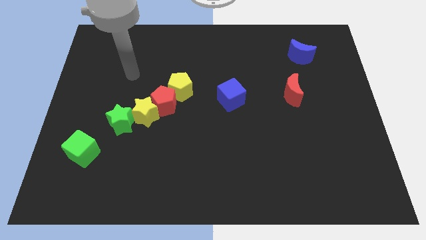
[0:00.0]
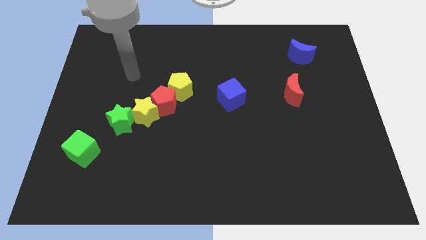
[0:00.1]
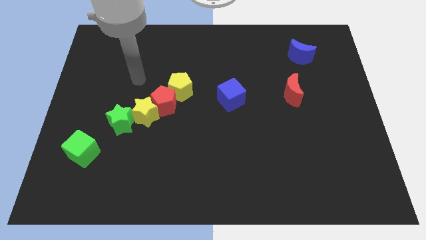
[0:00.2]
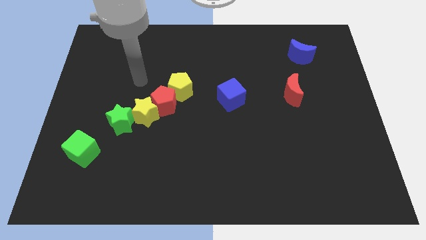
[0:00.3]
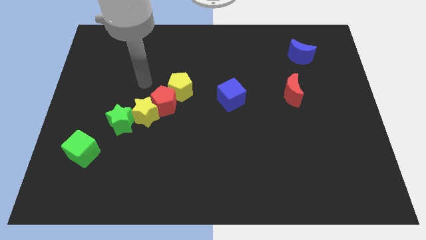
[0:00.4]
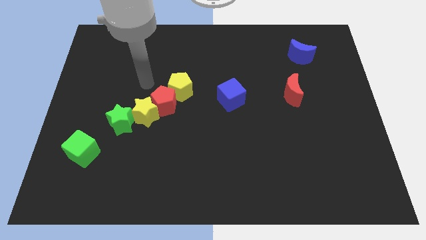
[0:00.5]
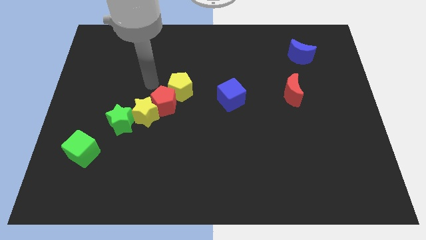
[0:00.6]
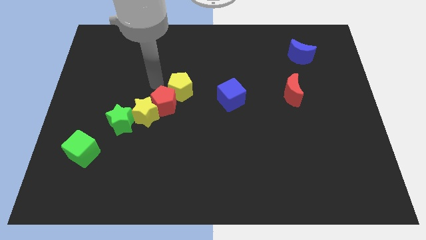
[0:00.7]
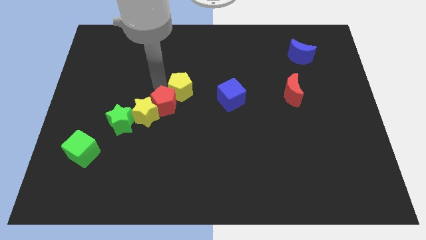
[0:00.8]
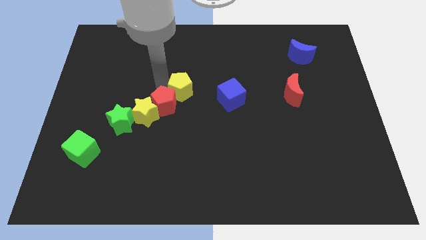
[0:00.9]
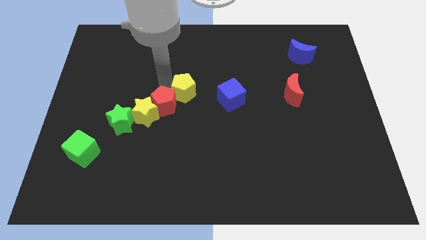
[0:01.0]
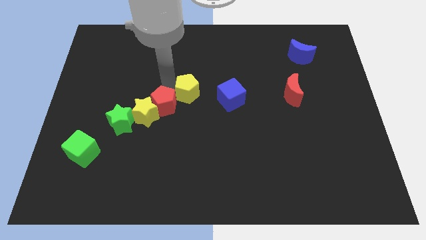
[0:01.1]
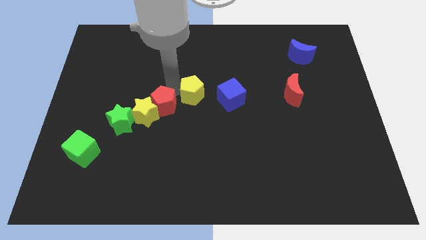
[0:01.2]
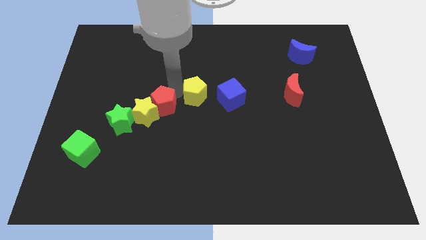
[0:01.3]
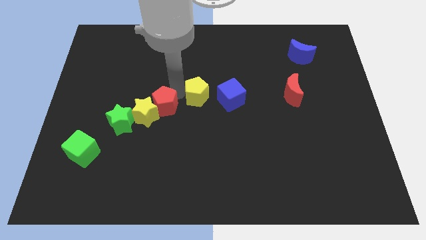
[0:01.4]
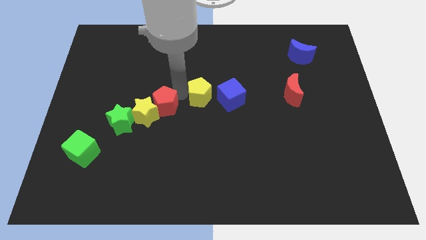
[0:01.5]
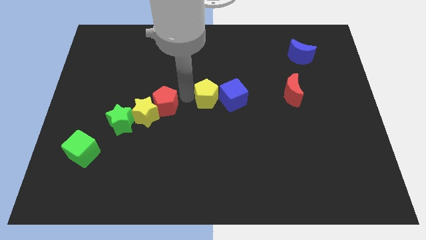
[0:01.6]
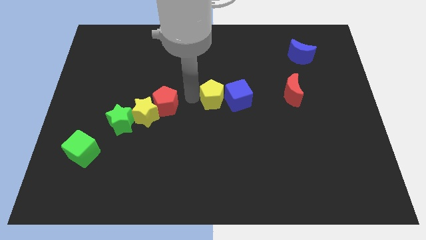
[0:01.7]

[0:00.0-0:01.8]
move the yellow pentagon into the blue cube

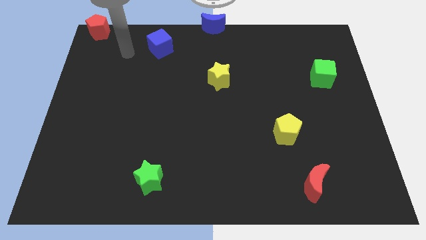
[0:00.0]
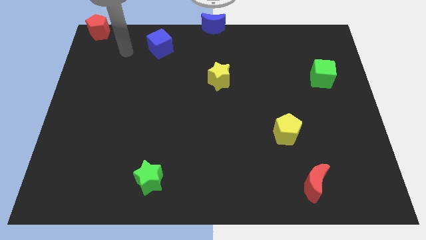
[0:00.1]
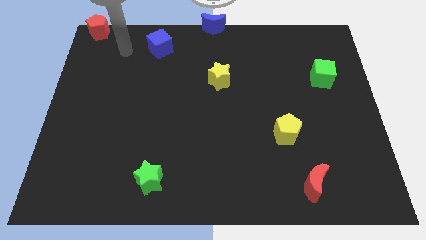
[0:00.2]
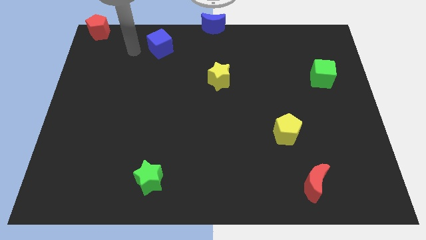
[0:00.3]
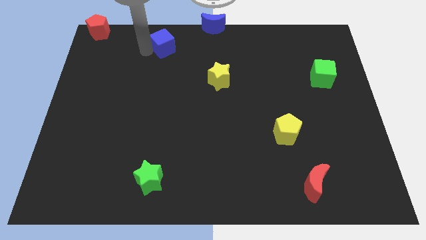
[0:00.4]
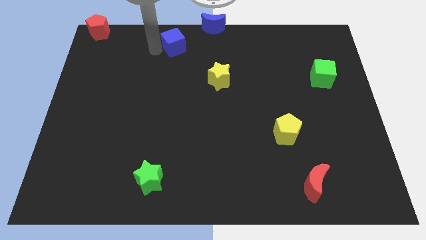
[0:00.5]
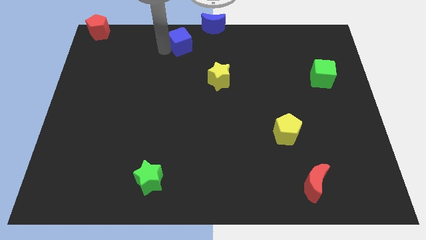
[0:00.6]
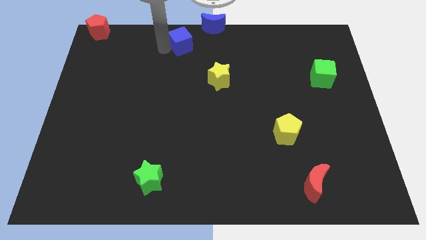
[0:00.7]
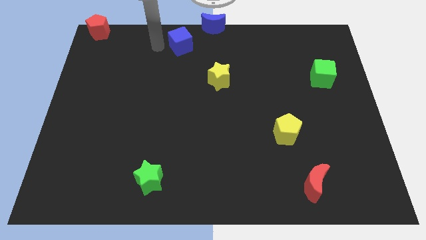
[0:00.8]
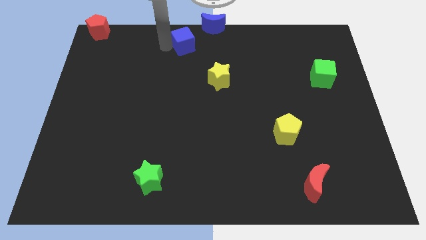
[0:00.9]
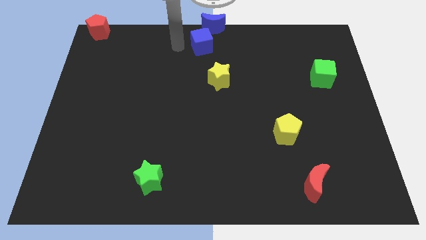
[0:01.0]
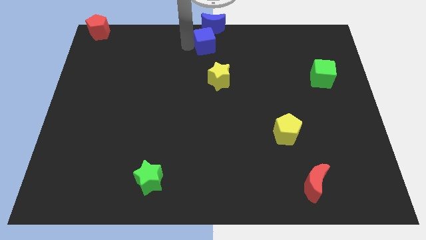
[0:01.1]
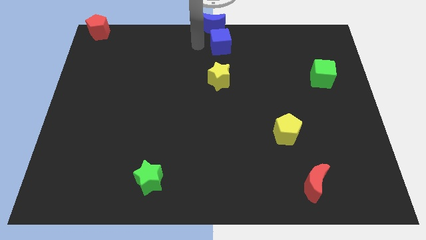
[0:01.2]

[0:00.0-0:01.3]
place the blue cube below the blue moon

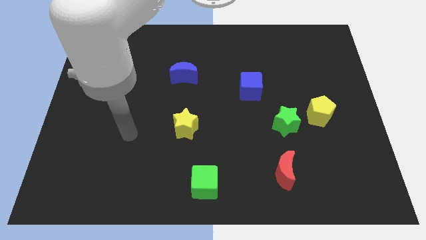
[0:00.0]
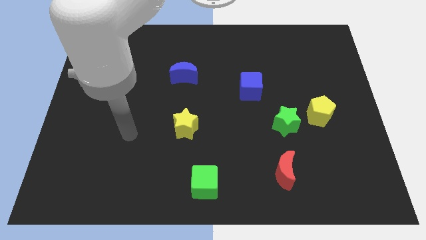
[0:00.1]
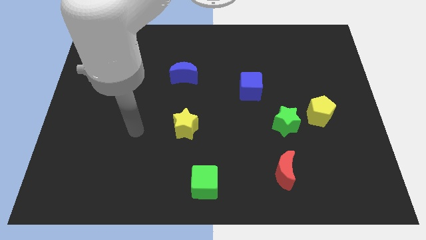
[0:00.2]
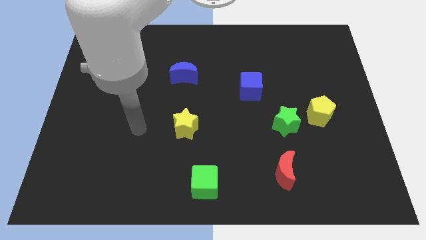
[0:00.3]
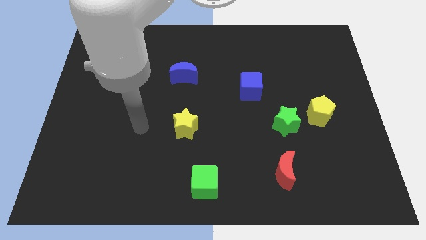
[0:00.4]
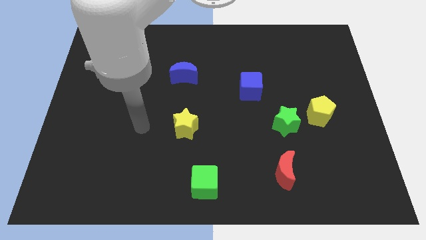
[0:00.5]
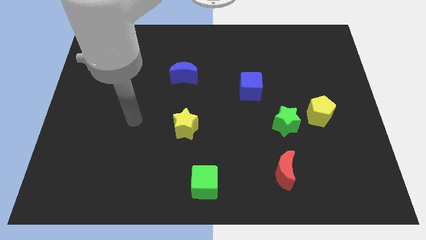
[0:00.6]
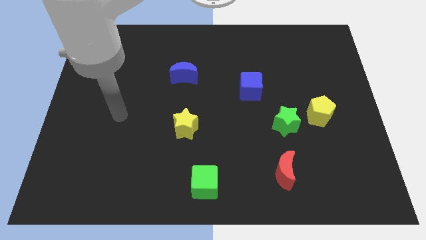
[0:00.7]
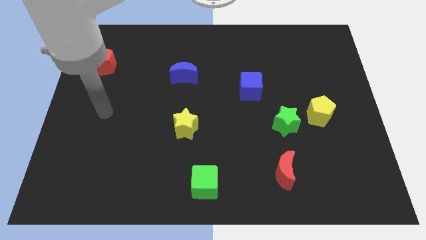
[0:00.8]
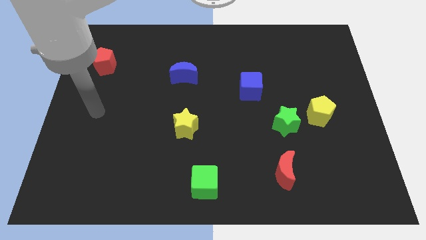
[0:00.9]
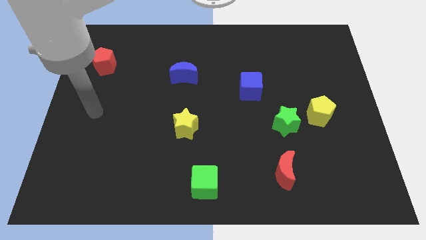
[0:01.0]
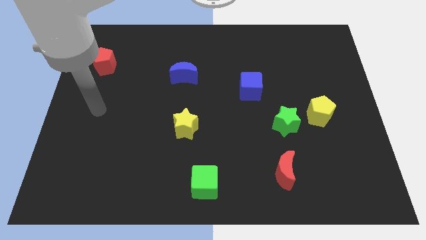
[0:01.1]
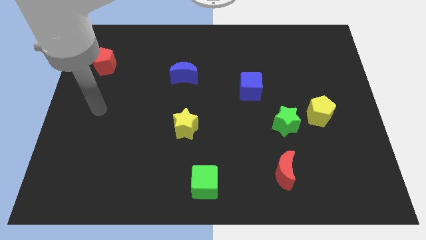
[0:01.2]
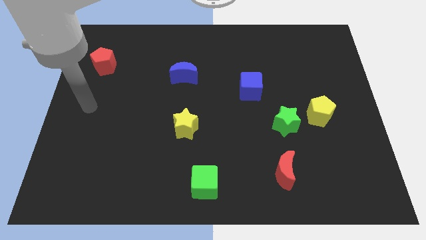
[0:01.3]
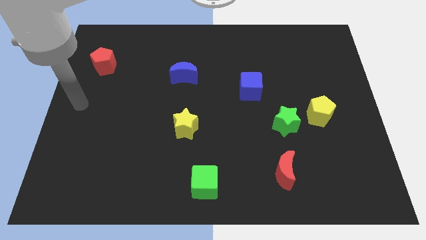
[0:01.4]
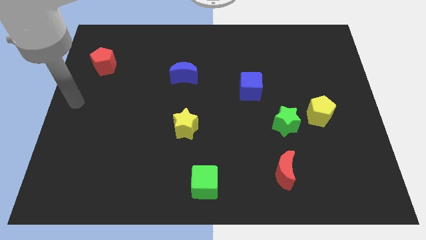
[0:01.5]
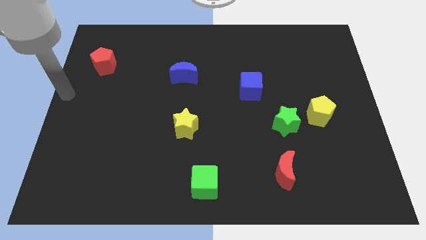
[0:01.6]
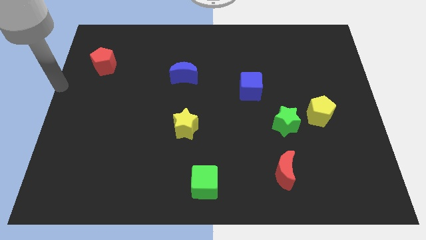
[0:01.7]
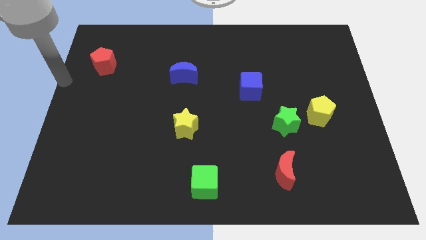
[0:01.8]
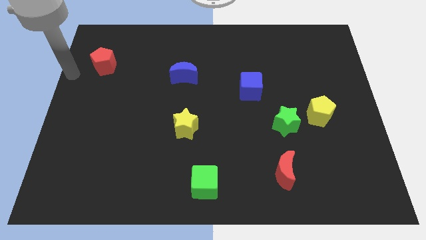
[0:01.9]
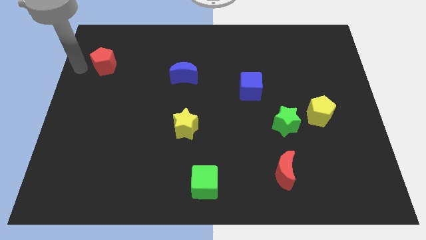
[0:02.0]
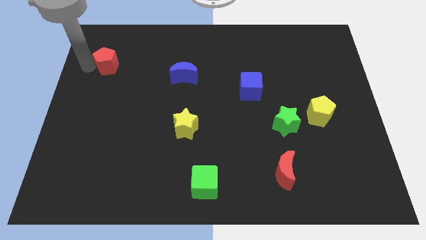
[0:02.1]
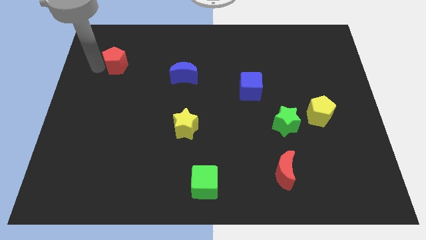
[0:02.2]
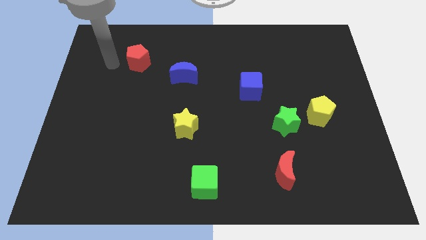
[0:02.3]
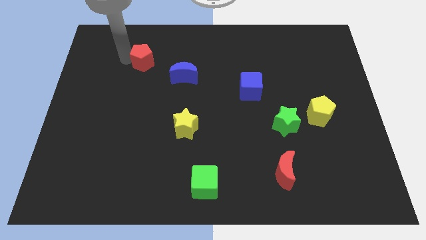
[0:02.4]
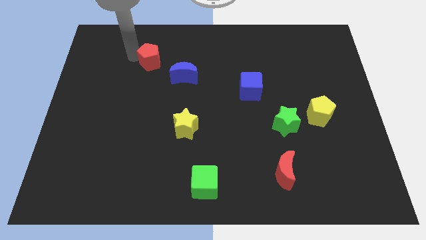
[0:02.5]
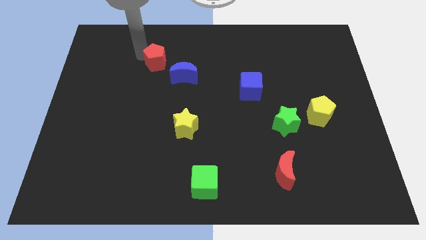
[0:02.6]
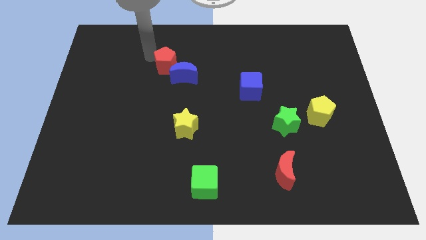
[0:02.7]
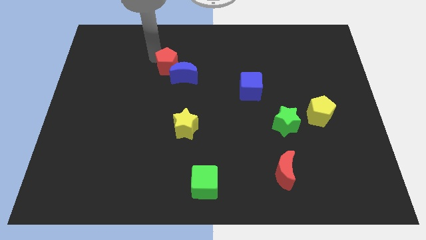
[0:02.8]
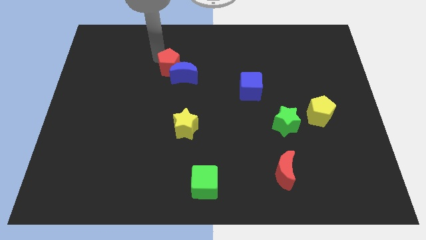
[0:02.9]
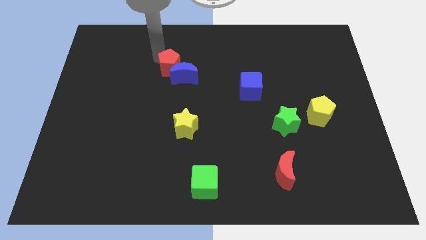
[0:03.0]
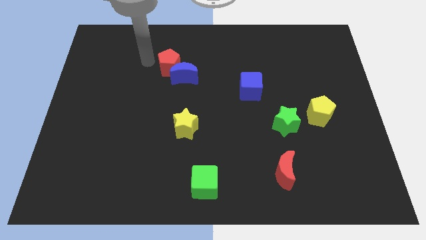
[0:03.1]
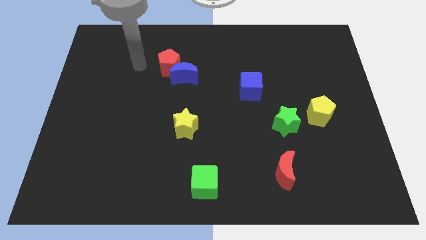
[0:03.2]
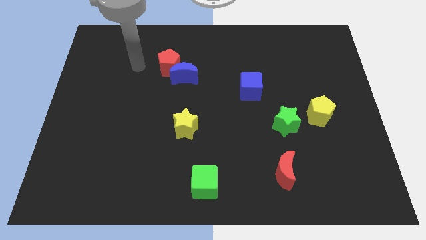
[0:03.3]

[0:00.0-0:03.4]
push the red pentagon into the blue moon

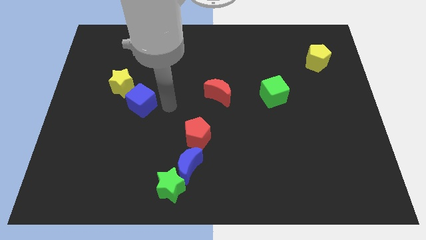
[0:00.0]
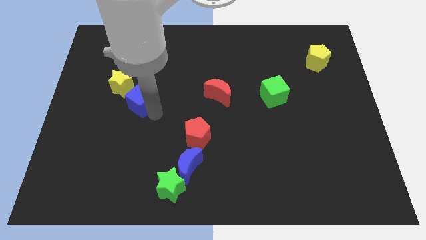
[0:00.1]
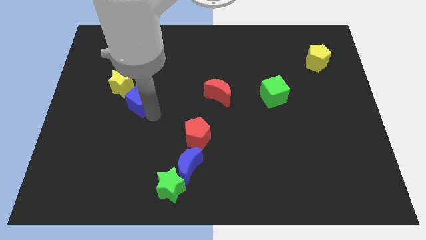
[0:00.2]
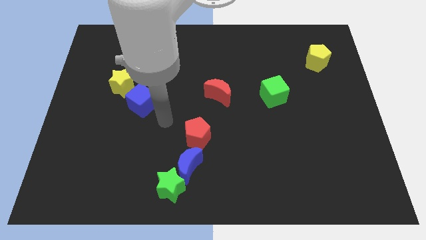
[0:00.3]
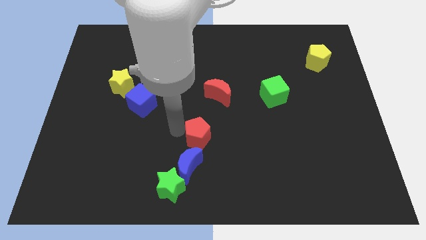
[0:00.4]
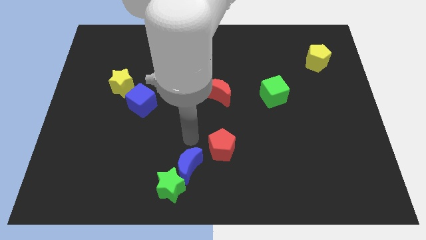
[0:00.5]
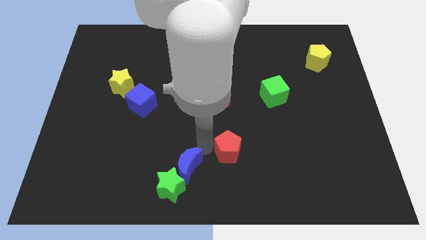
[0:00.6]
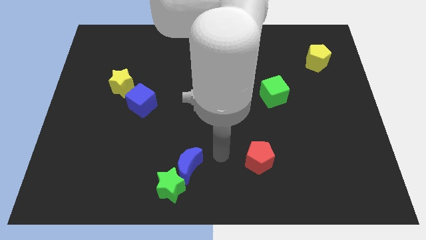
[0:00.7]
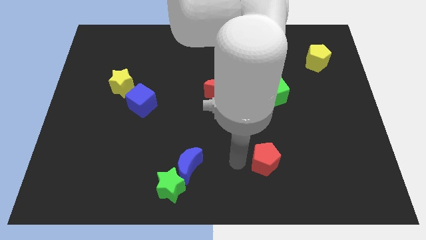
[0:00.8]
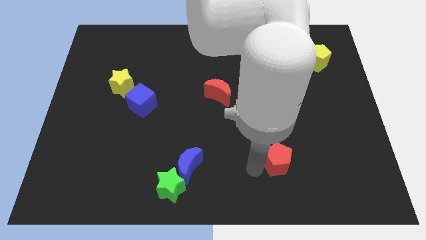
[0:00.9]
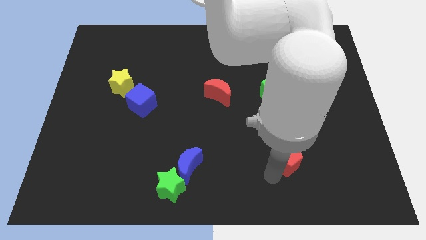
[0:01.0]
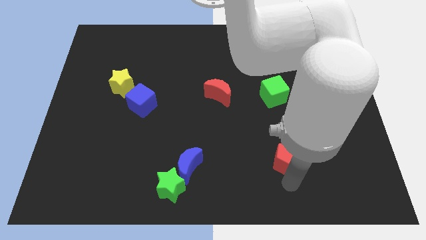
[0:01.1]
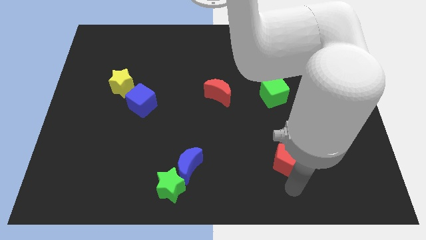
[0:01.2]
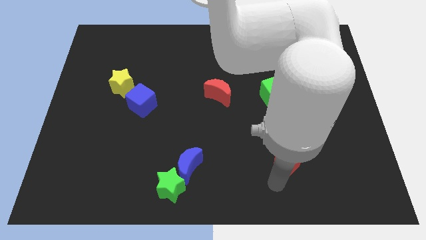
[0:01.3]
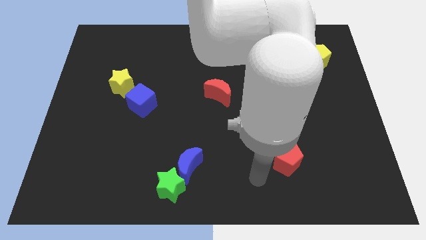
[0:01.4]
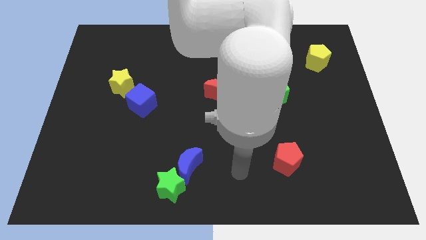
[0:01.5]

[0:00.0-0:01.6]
move the red pentagon below the green cube

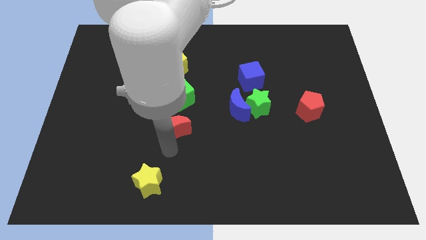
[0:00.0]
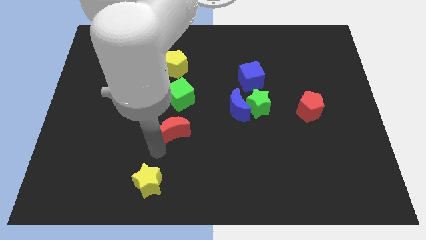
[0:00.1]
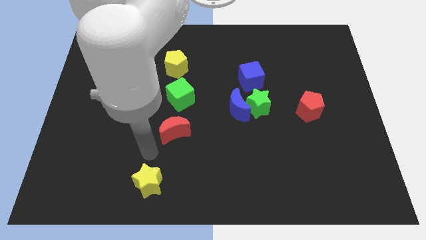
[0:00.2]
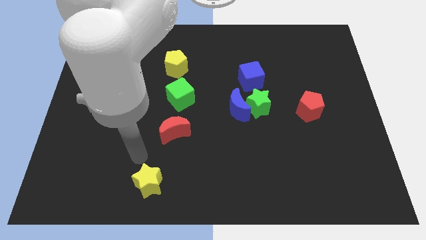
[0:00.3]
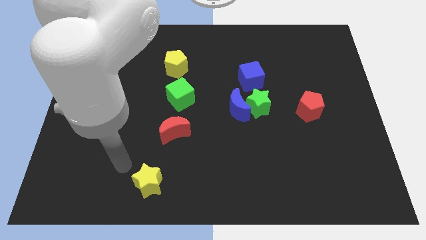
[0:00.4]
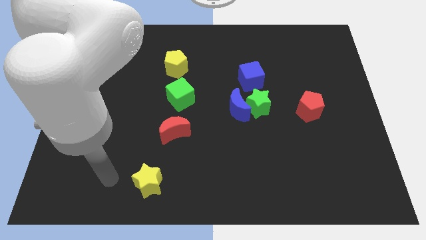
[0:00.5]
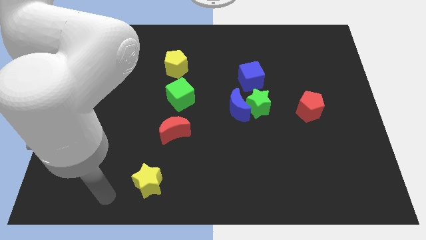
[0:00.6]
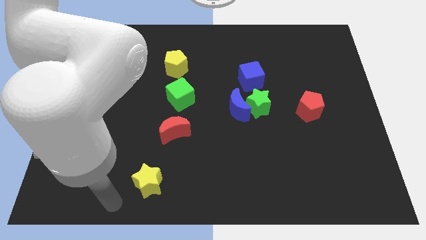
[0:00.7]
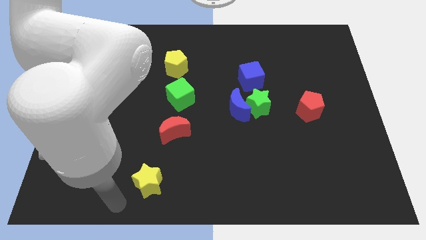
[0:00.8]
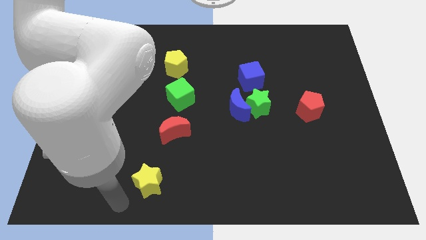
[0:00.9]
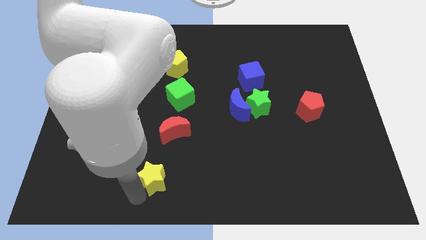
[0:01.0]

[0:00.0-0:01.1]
place your arm to the bottom of the board
